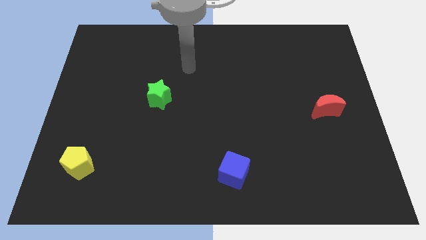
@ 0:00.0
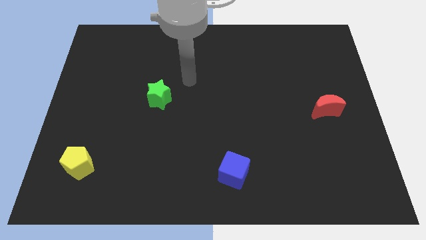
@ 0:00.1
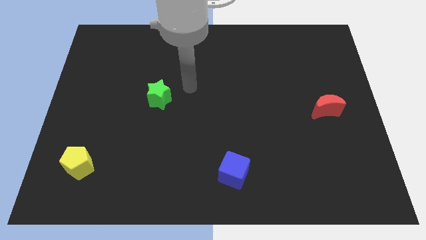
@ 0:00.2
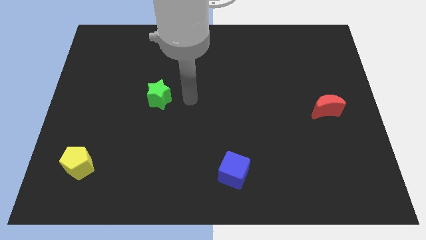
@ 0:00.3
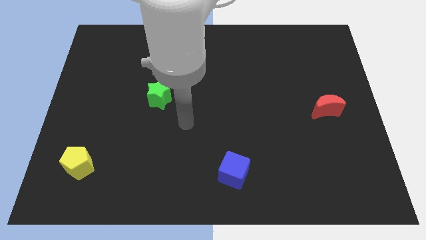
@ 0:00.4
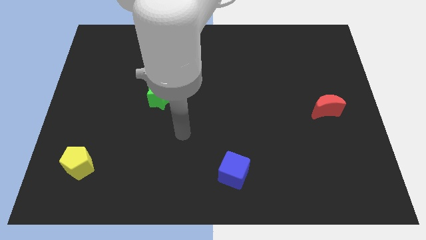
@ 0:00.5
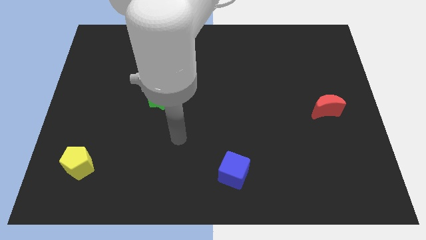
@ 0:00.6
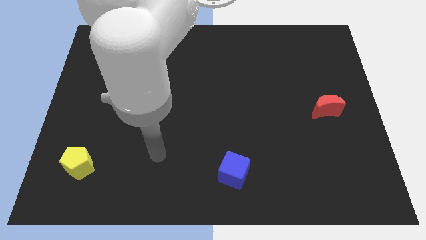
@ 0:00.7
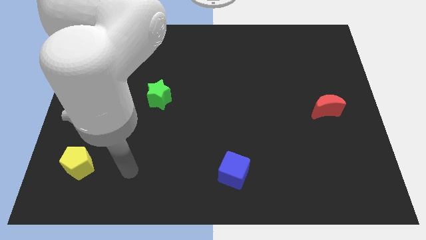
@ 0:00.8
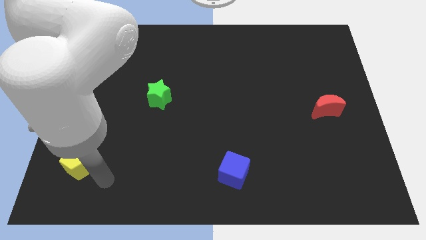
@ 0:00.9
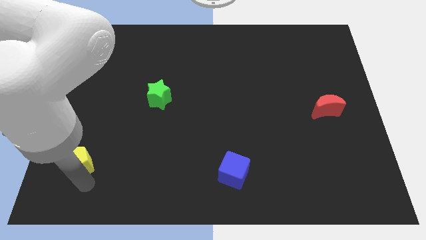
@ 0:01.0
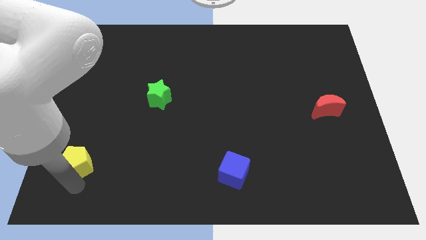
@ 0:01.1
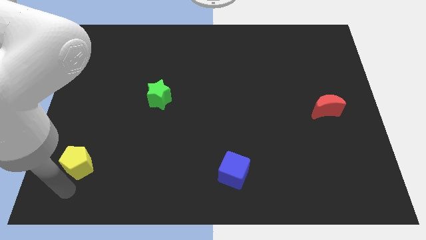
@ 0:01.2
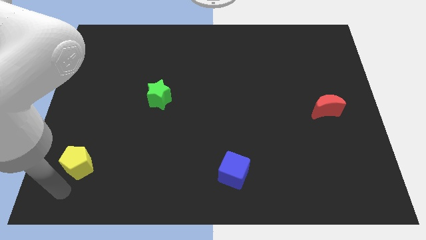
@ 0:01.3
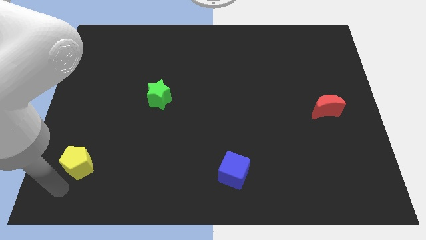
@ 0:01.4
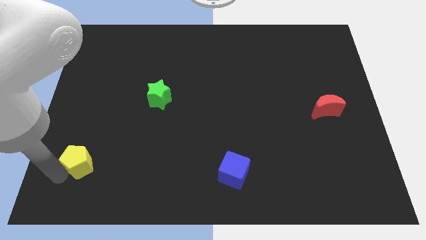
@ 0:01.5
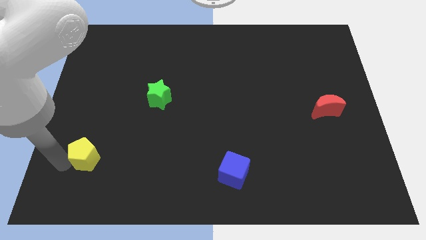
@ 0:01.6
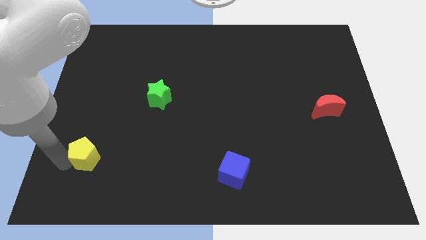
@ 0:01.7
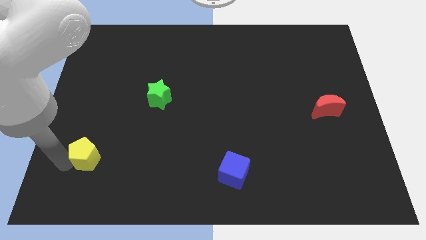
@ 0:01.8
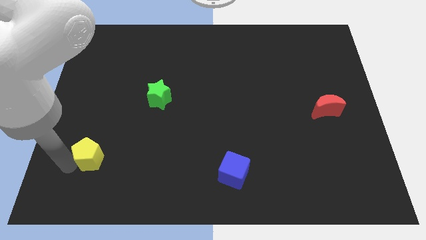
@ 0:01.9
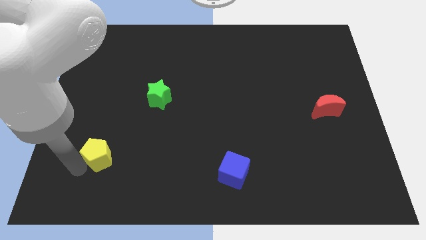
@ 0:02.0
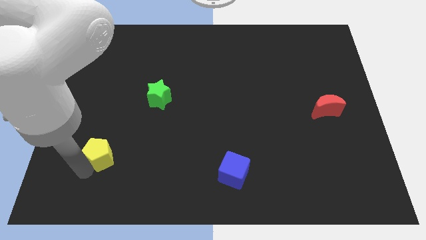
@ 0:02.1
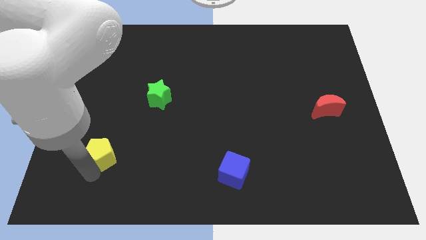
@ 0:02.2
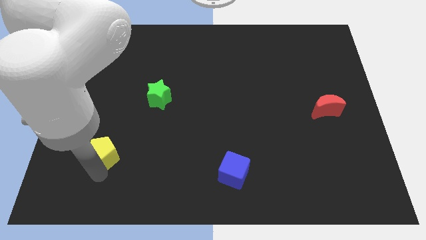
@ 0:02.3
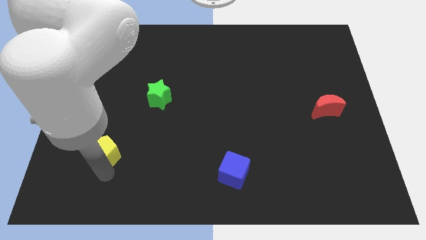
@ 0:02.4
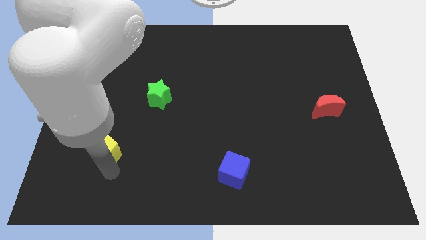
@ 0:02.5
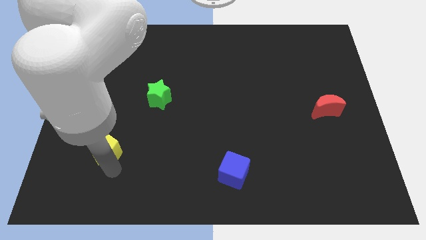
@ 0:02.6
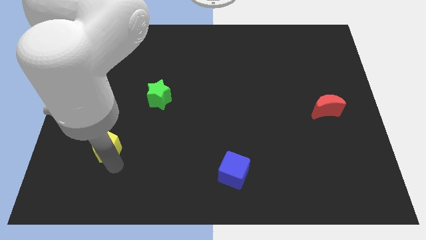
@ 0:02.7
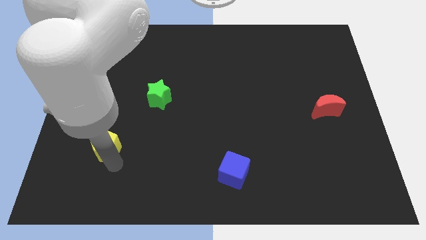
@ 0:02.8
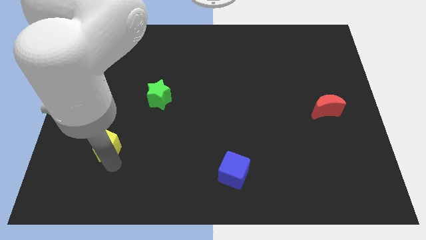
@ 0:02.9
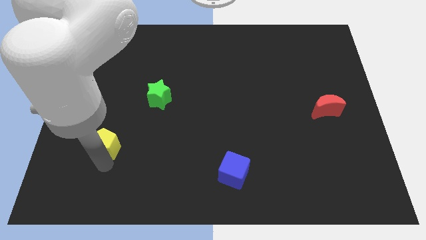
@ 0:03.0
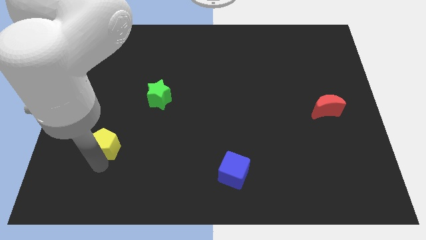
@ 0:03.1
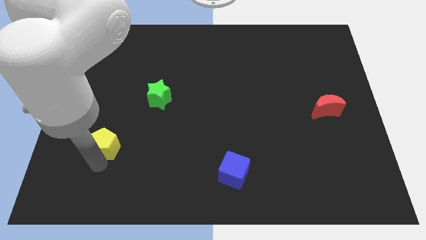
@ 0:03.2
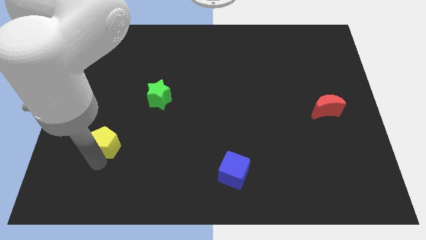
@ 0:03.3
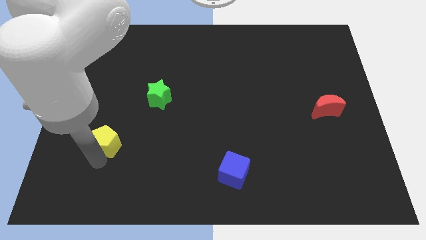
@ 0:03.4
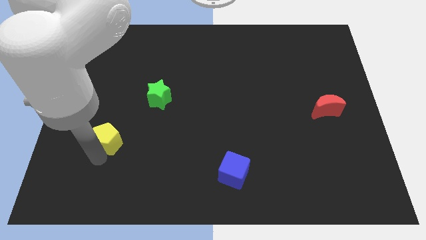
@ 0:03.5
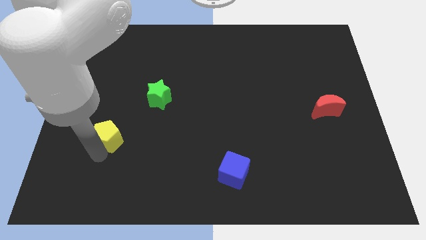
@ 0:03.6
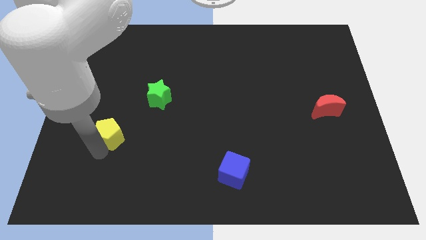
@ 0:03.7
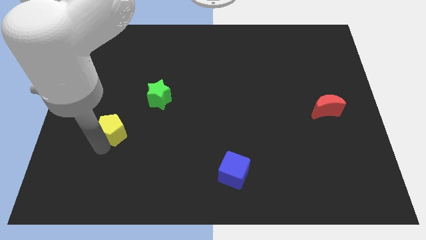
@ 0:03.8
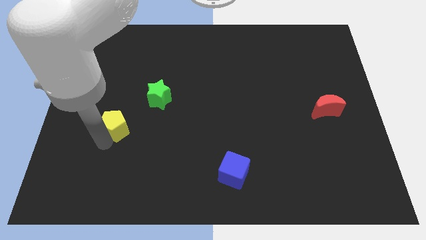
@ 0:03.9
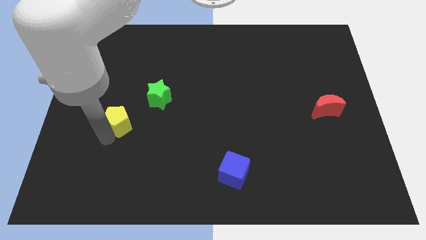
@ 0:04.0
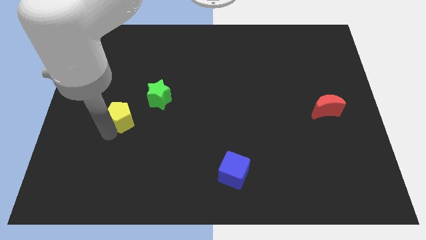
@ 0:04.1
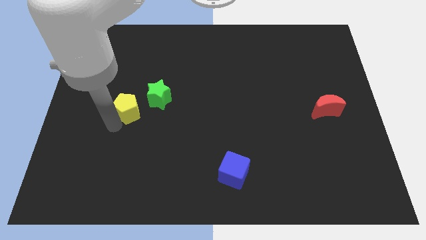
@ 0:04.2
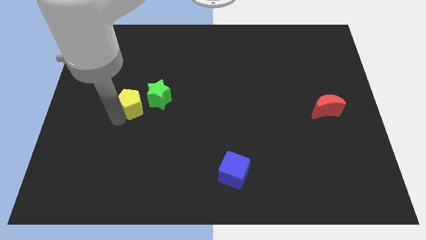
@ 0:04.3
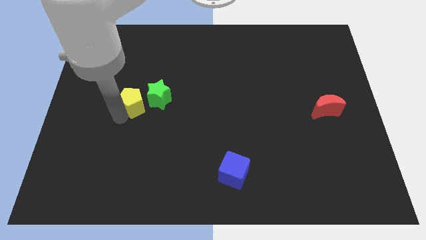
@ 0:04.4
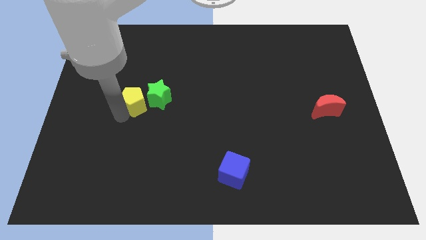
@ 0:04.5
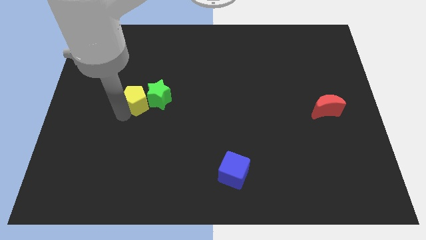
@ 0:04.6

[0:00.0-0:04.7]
move the yellow block close to the star

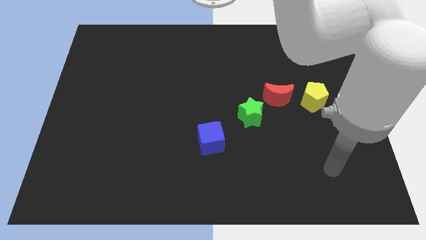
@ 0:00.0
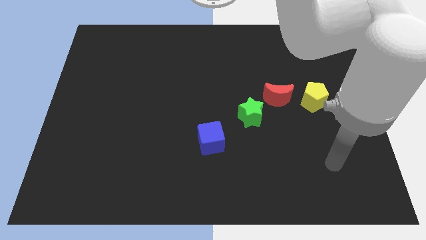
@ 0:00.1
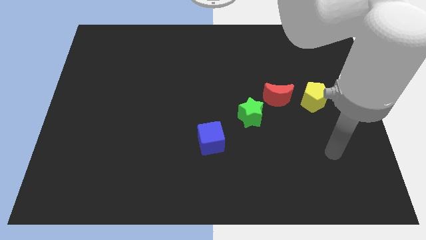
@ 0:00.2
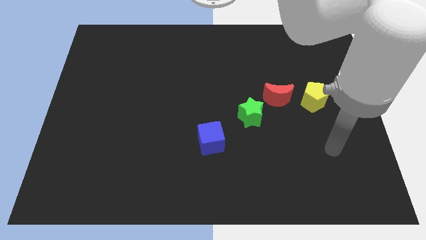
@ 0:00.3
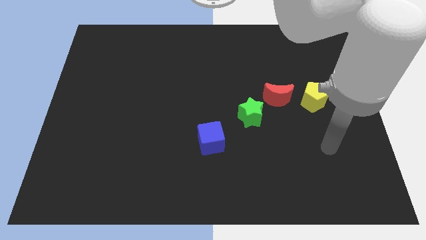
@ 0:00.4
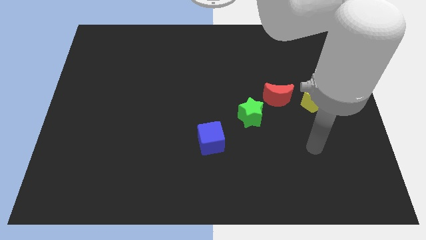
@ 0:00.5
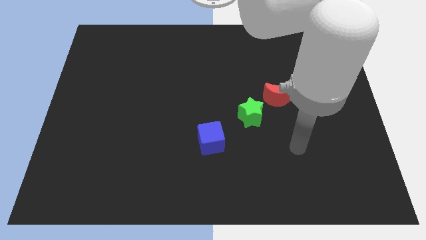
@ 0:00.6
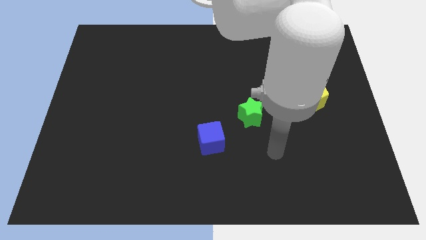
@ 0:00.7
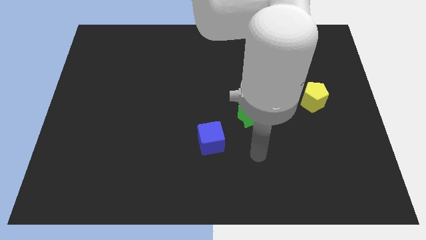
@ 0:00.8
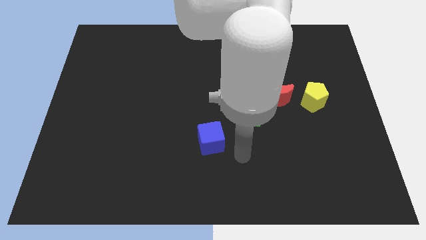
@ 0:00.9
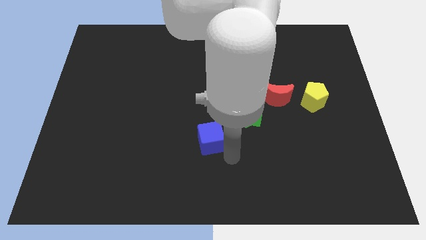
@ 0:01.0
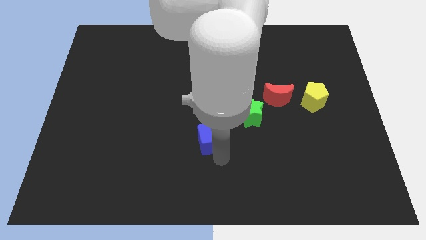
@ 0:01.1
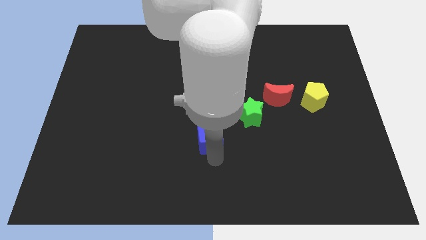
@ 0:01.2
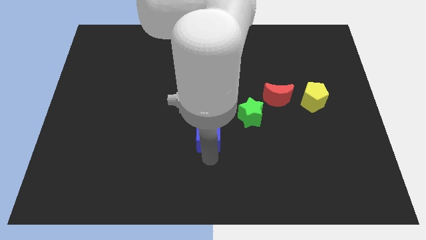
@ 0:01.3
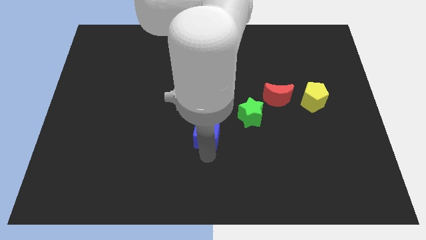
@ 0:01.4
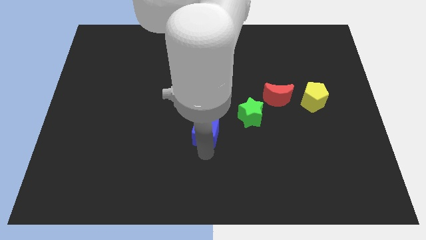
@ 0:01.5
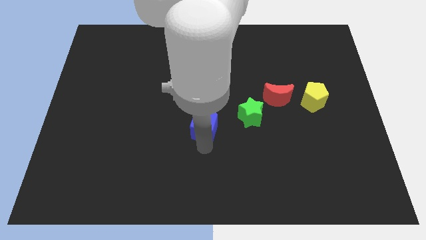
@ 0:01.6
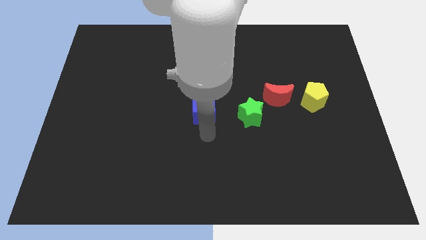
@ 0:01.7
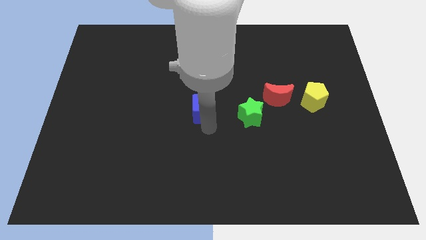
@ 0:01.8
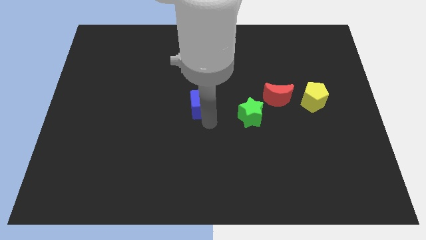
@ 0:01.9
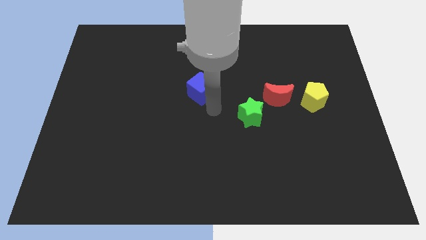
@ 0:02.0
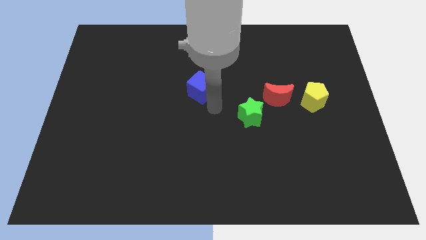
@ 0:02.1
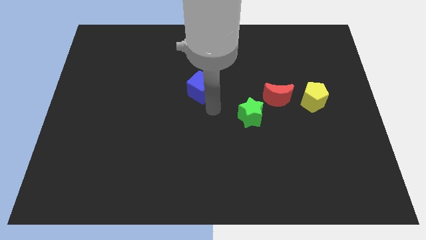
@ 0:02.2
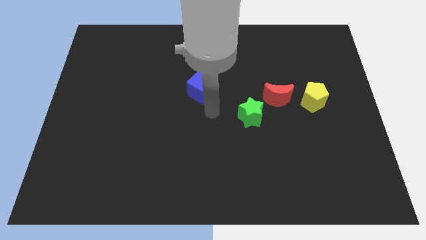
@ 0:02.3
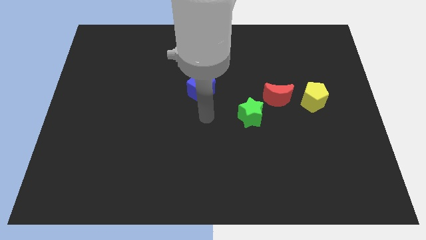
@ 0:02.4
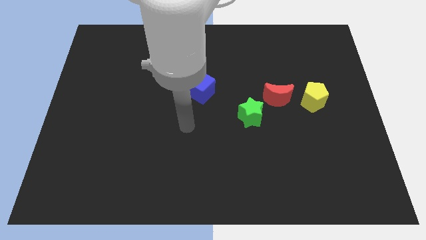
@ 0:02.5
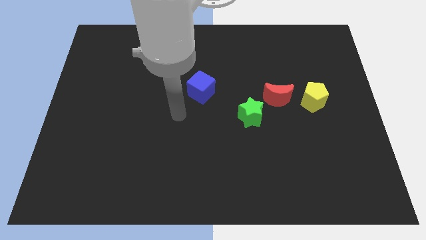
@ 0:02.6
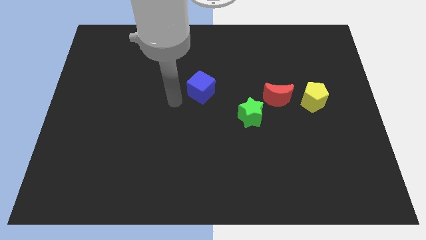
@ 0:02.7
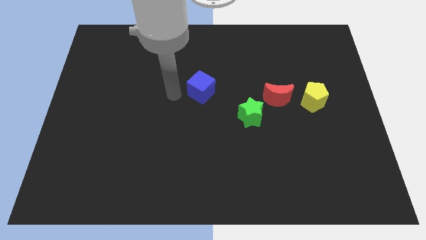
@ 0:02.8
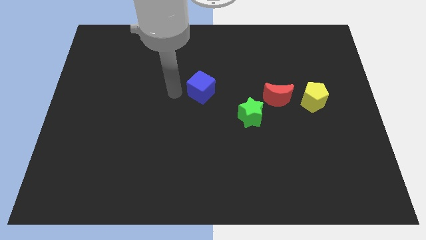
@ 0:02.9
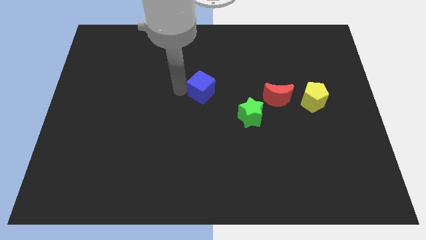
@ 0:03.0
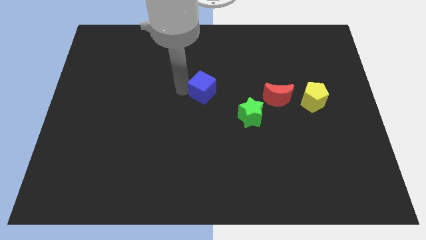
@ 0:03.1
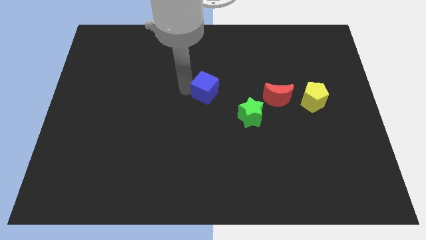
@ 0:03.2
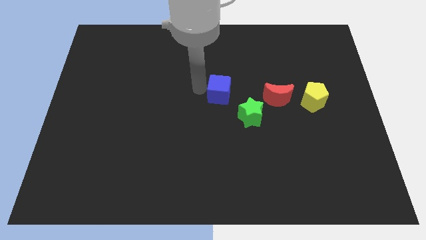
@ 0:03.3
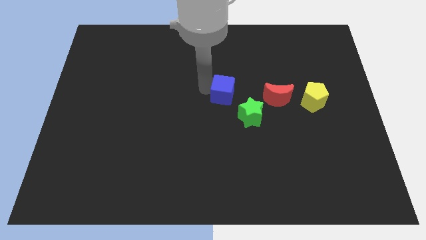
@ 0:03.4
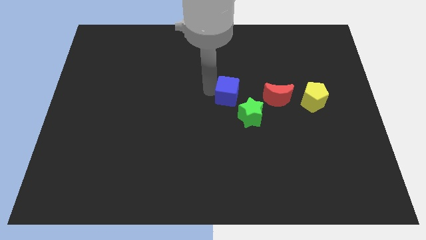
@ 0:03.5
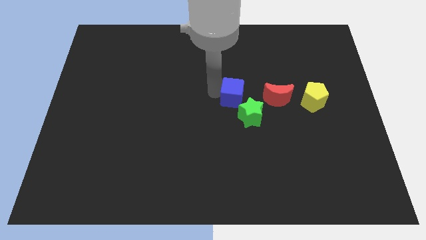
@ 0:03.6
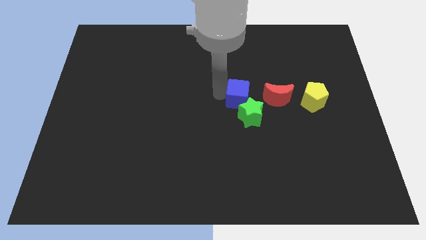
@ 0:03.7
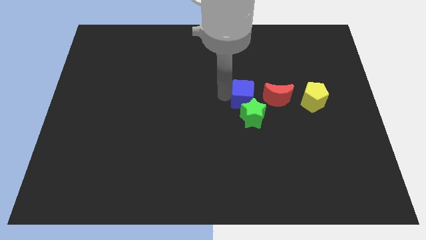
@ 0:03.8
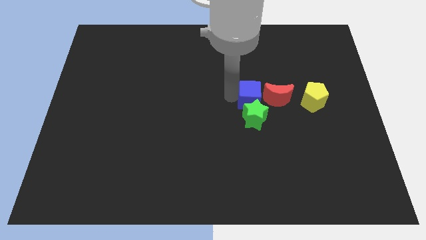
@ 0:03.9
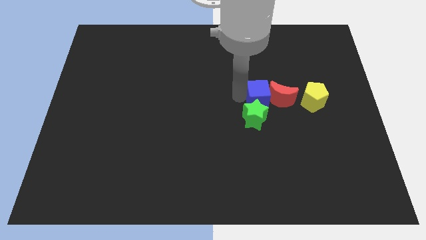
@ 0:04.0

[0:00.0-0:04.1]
move the blue cube to the star
